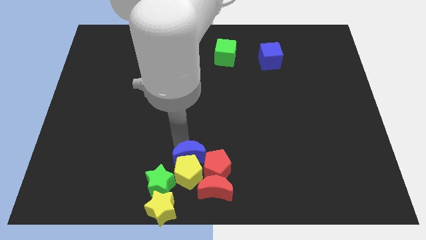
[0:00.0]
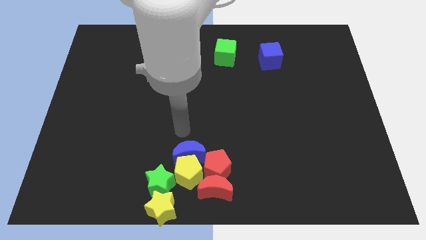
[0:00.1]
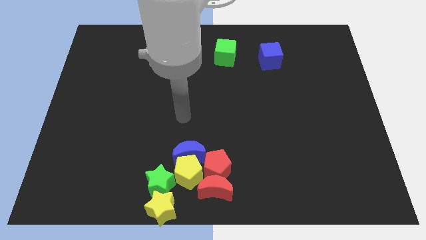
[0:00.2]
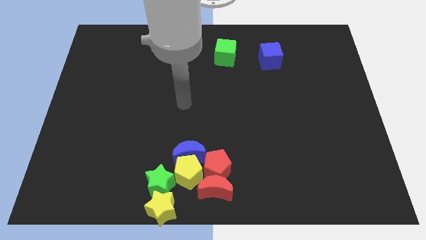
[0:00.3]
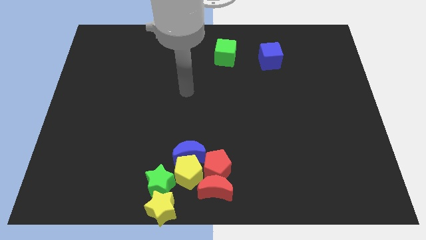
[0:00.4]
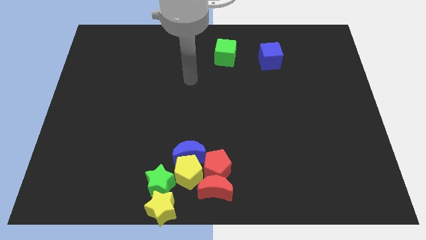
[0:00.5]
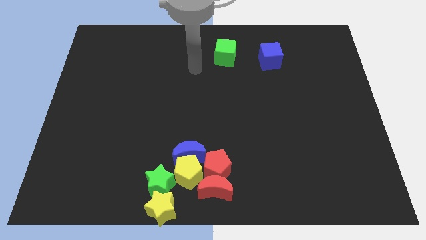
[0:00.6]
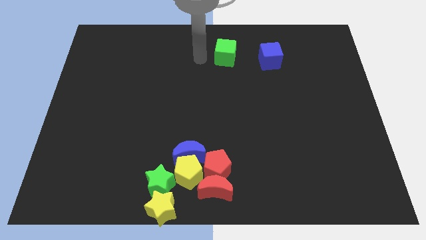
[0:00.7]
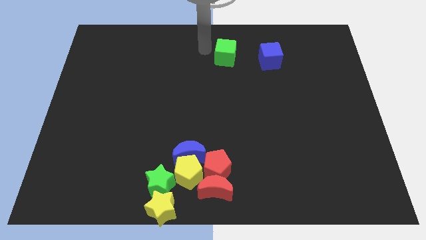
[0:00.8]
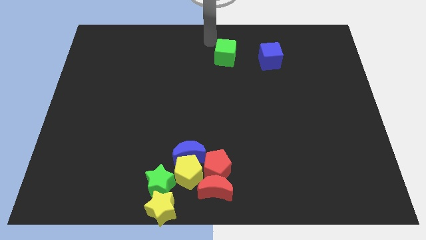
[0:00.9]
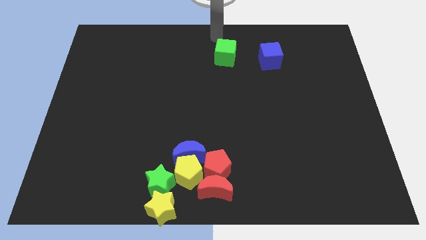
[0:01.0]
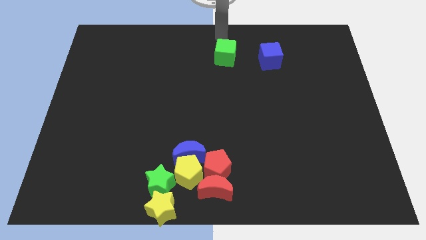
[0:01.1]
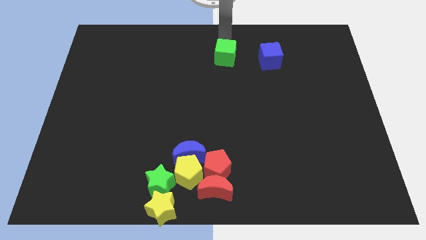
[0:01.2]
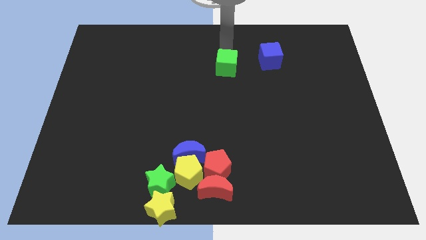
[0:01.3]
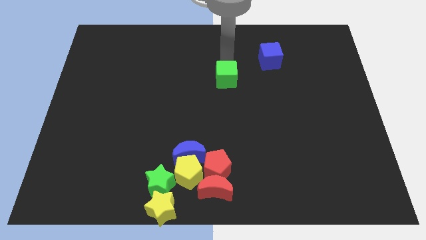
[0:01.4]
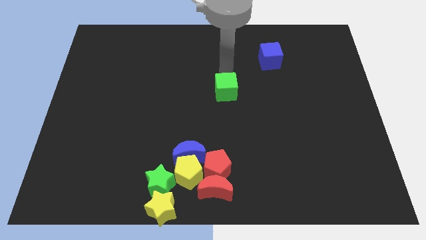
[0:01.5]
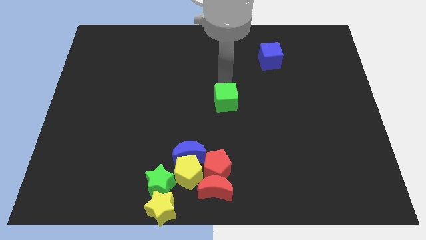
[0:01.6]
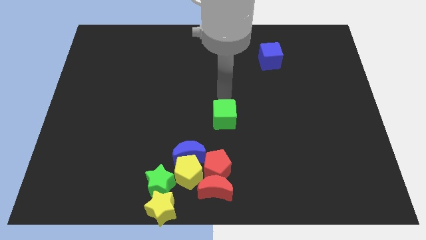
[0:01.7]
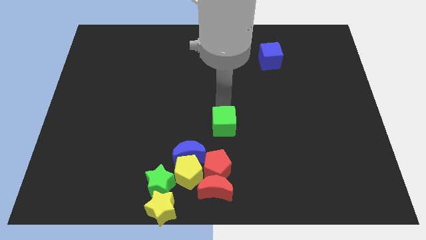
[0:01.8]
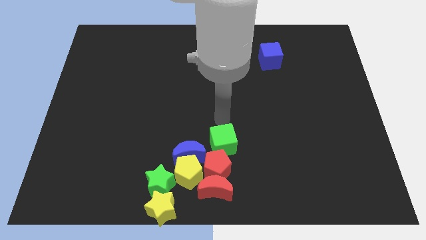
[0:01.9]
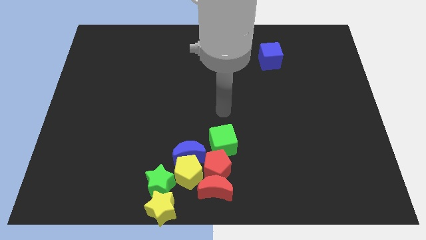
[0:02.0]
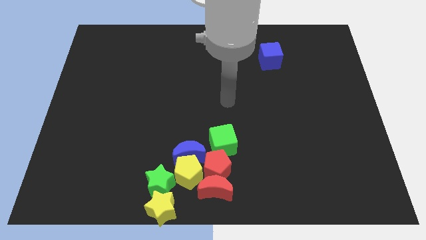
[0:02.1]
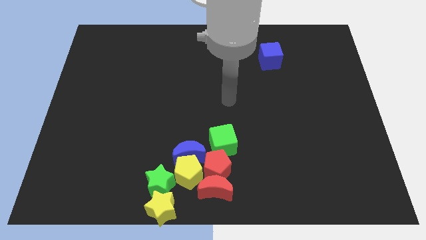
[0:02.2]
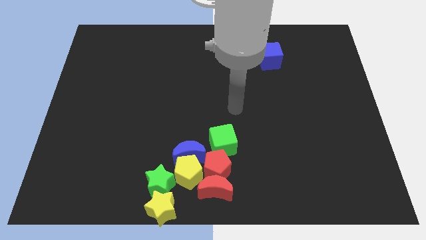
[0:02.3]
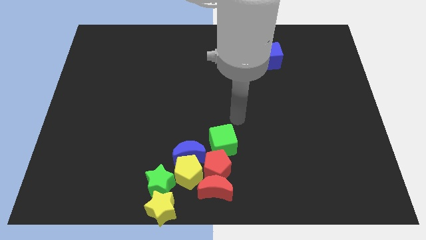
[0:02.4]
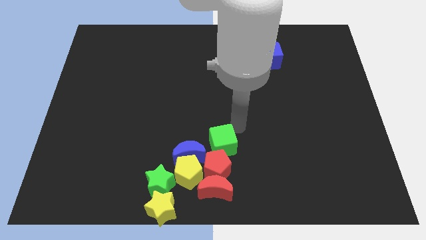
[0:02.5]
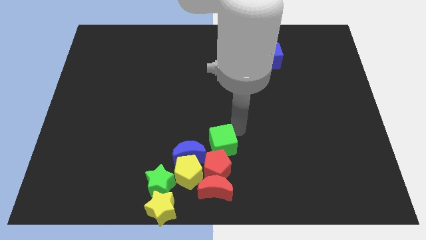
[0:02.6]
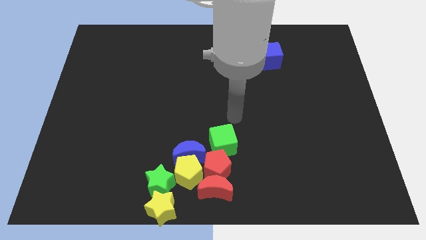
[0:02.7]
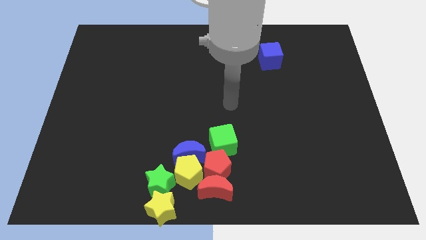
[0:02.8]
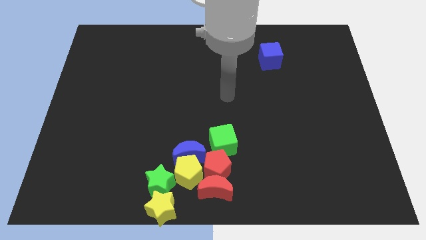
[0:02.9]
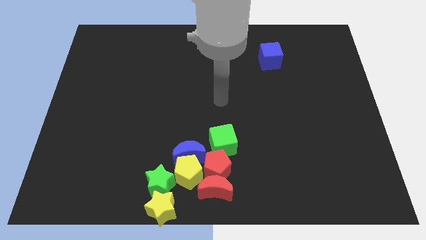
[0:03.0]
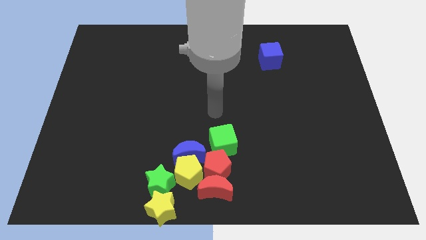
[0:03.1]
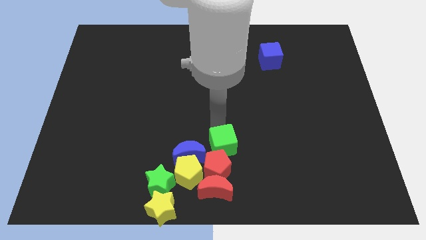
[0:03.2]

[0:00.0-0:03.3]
move the green cube parallel to the red pentagon

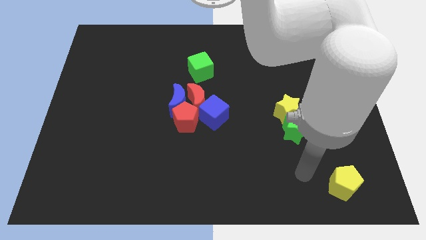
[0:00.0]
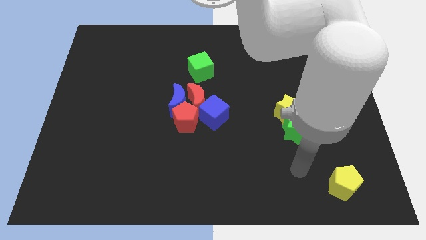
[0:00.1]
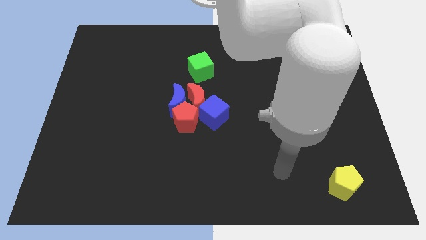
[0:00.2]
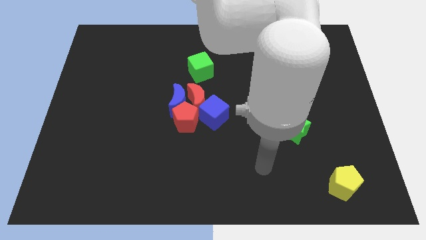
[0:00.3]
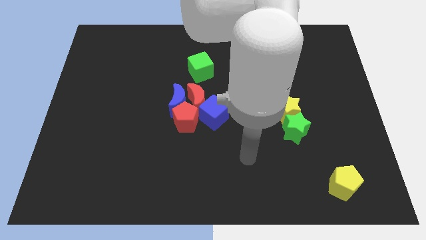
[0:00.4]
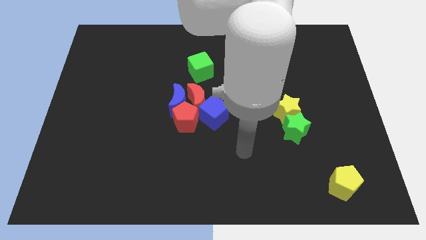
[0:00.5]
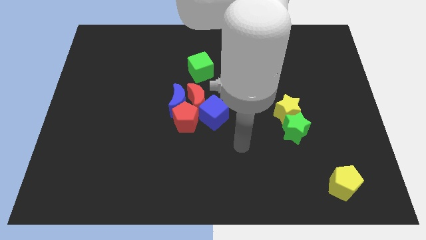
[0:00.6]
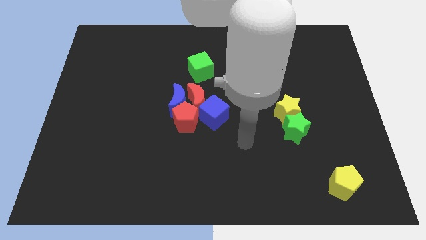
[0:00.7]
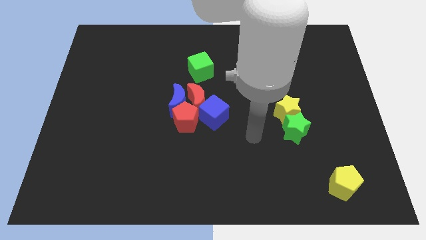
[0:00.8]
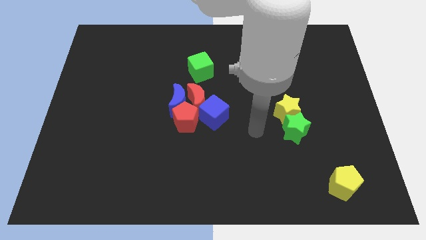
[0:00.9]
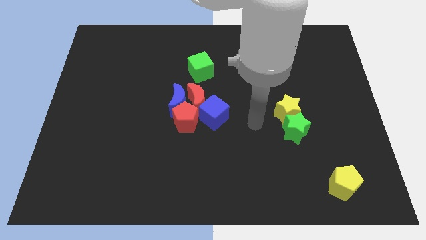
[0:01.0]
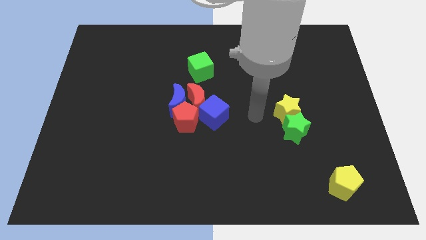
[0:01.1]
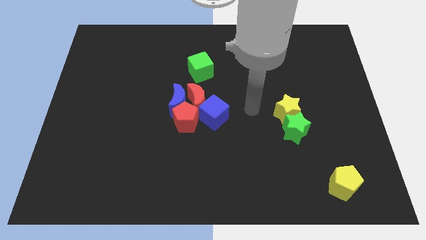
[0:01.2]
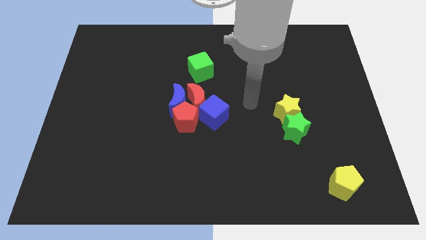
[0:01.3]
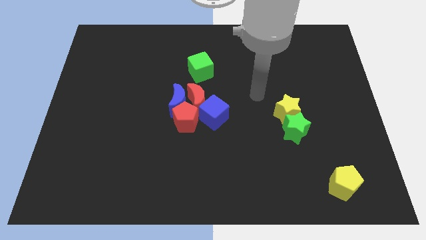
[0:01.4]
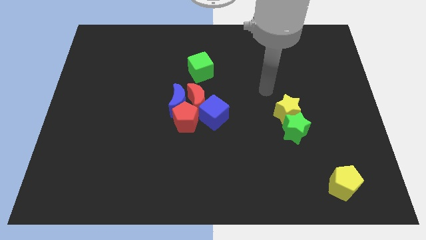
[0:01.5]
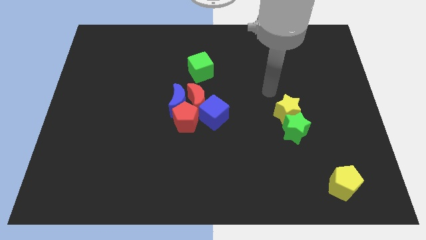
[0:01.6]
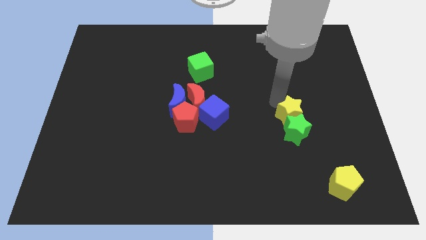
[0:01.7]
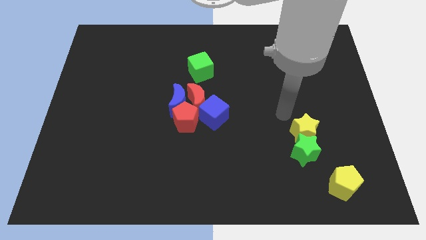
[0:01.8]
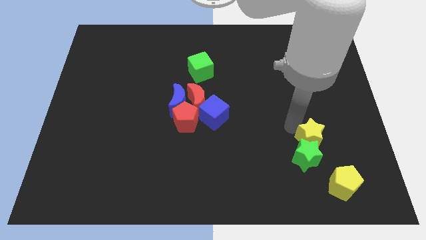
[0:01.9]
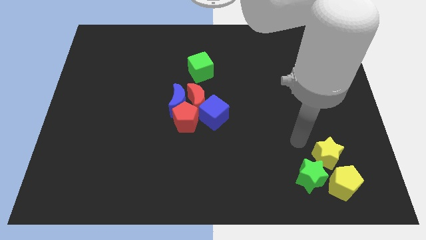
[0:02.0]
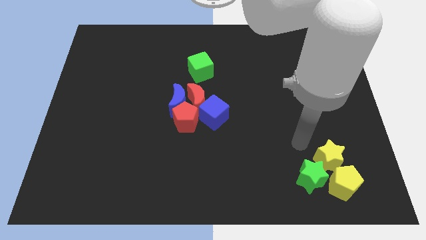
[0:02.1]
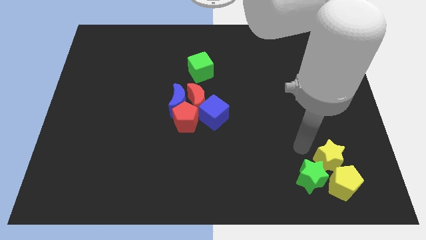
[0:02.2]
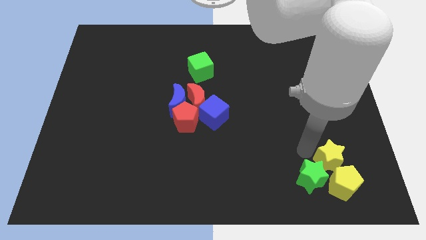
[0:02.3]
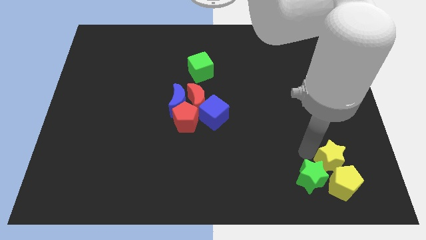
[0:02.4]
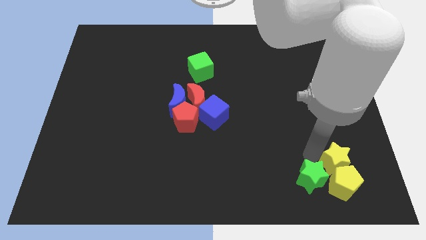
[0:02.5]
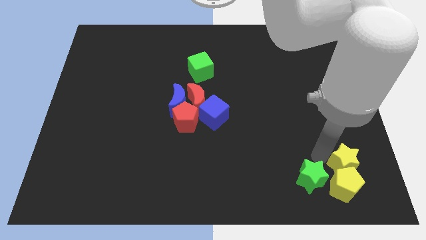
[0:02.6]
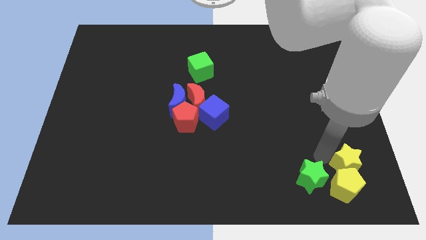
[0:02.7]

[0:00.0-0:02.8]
move the green star with the yellow star towards the yellow pentagon

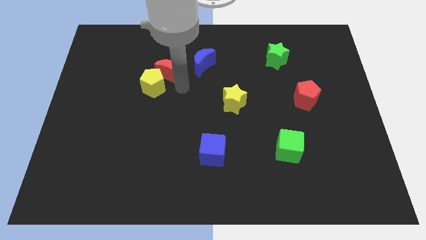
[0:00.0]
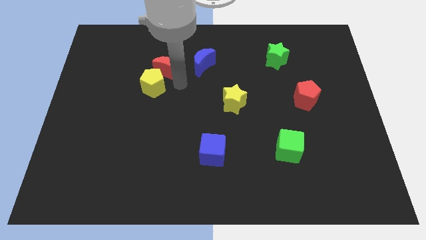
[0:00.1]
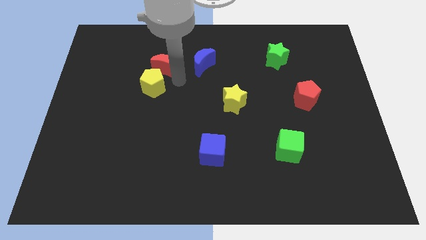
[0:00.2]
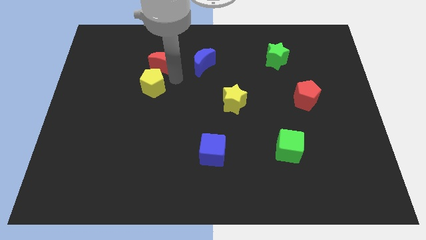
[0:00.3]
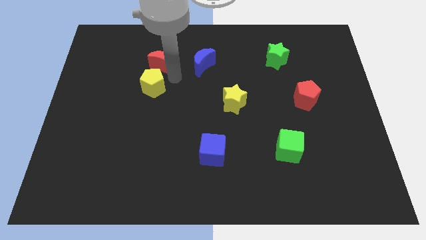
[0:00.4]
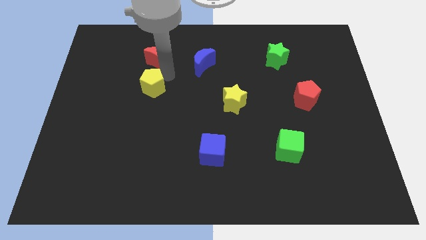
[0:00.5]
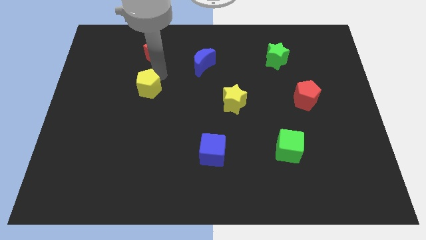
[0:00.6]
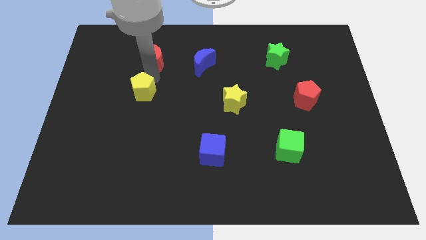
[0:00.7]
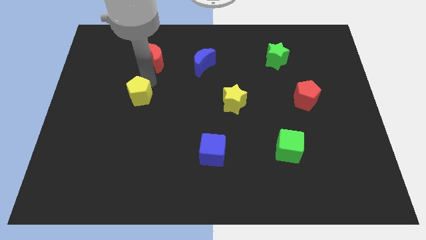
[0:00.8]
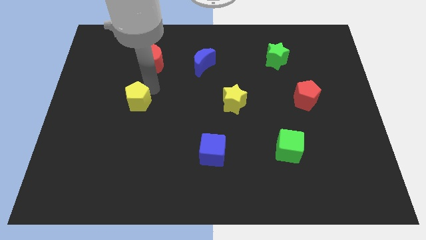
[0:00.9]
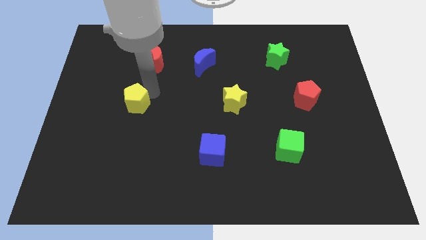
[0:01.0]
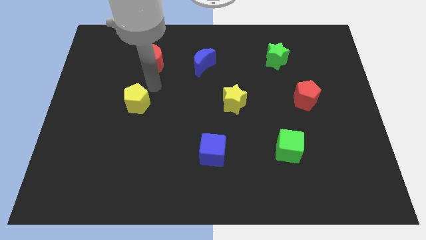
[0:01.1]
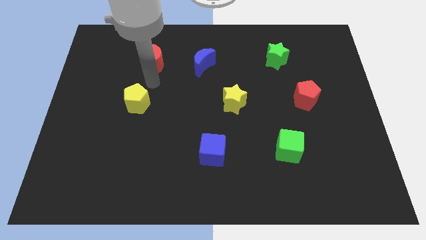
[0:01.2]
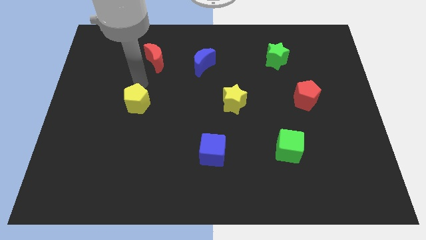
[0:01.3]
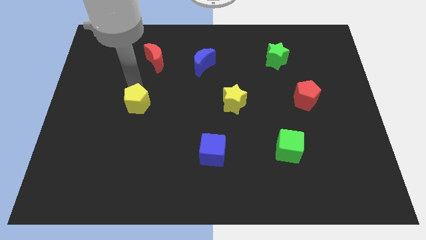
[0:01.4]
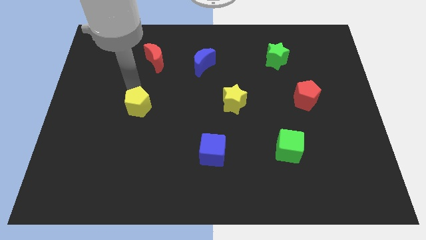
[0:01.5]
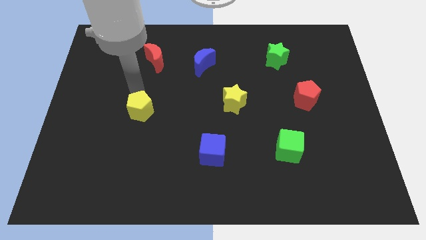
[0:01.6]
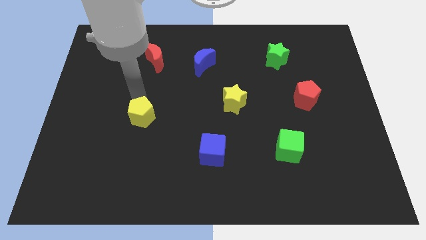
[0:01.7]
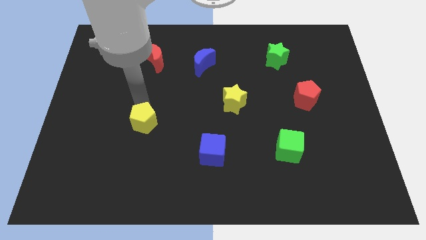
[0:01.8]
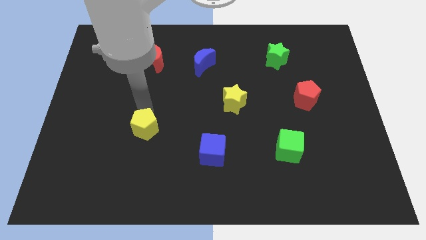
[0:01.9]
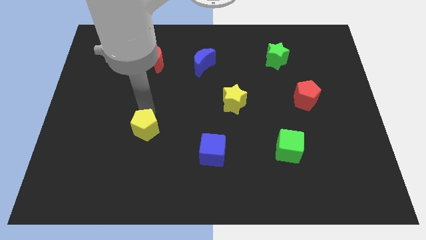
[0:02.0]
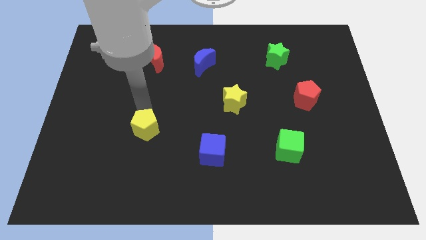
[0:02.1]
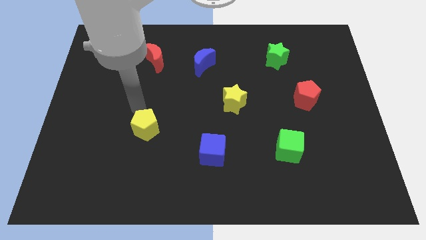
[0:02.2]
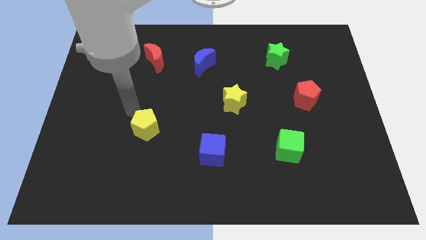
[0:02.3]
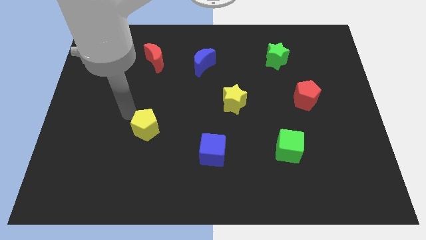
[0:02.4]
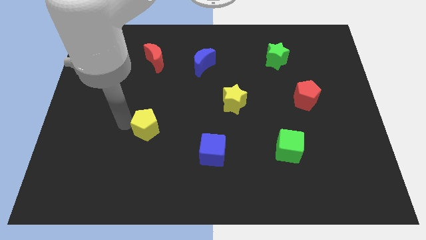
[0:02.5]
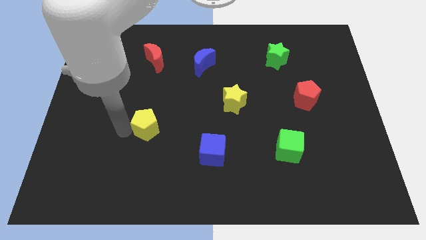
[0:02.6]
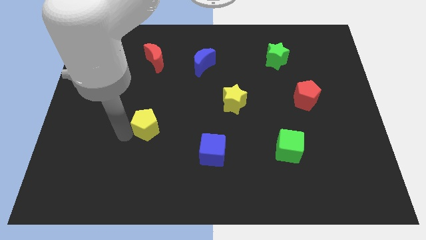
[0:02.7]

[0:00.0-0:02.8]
move the yellow pentagon downwards

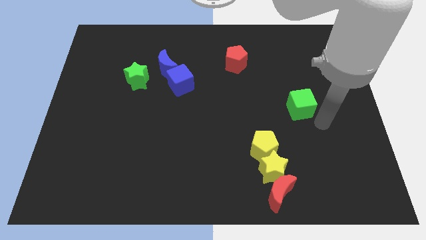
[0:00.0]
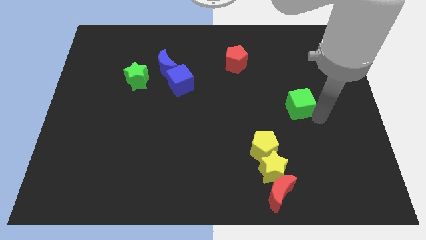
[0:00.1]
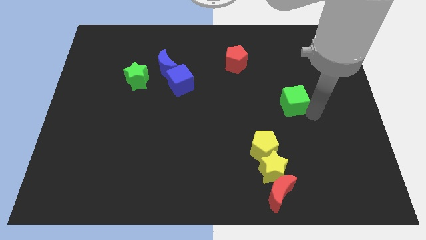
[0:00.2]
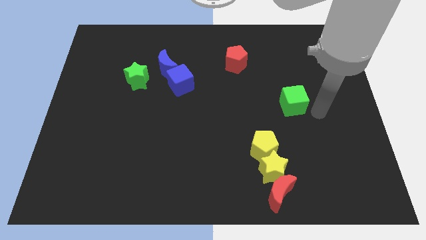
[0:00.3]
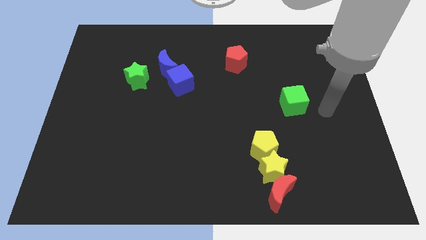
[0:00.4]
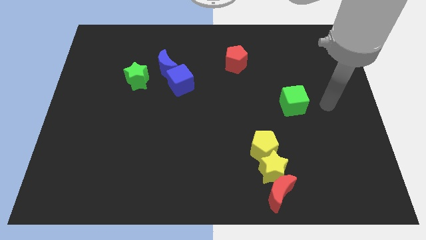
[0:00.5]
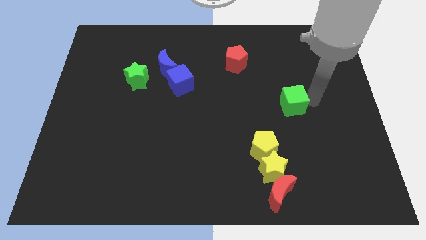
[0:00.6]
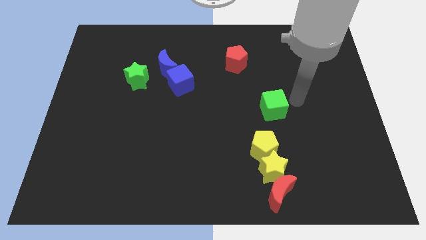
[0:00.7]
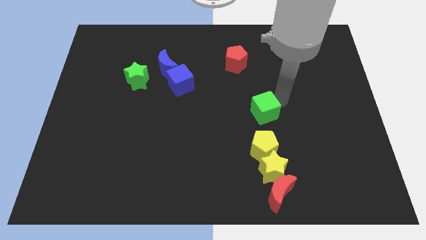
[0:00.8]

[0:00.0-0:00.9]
place the green cube above the yellow pentagon
